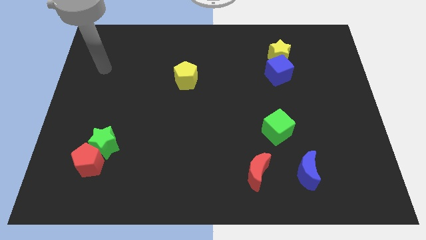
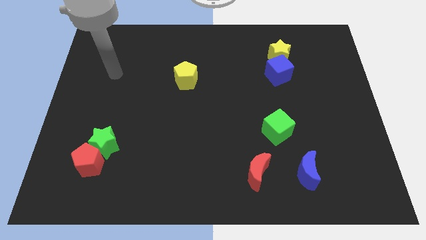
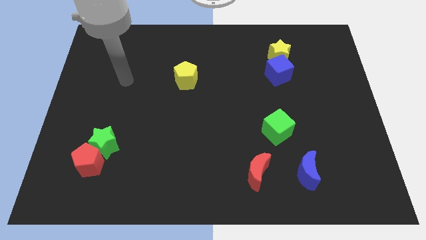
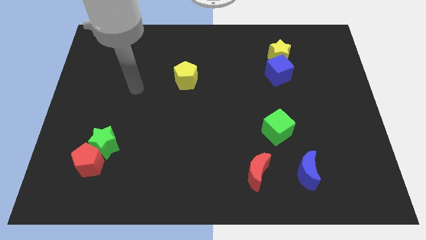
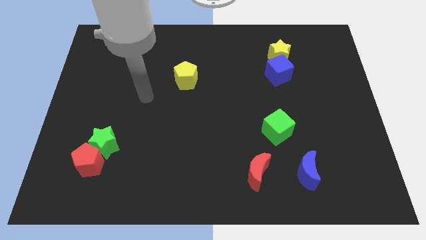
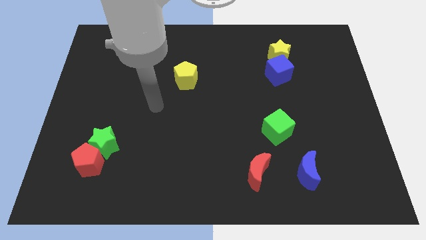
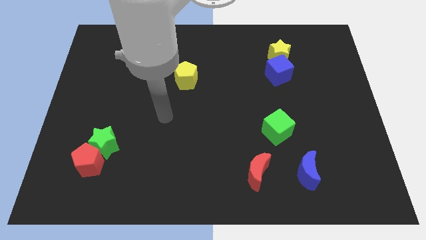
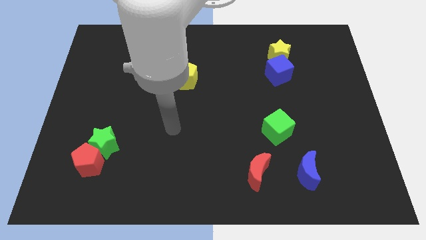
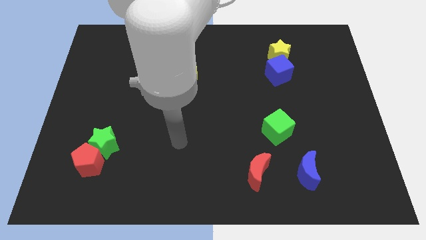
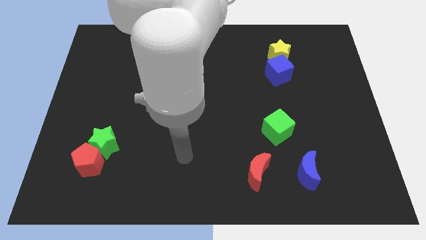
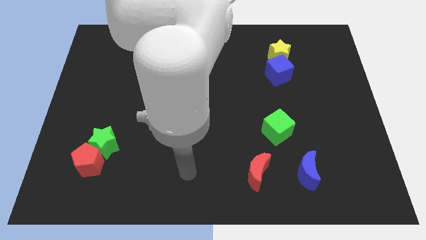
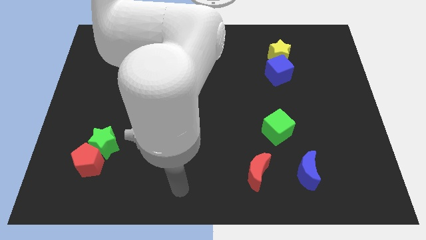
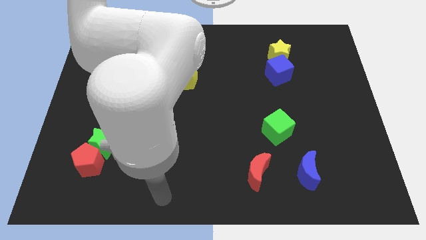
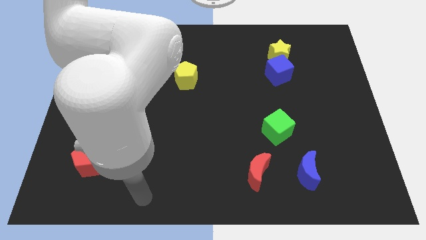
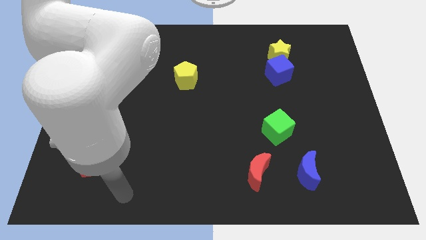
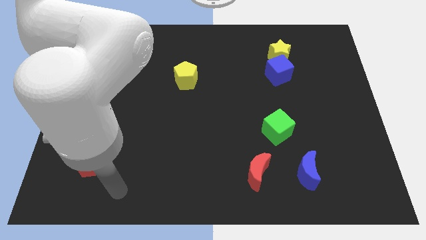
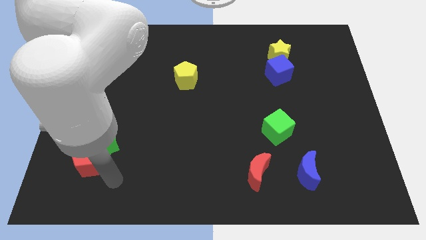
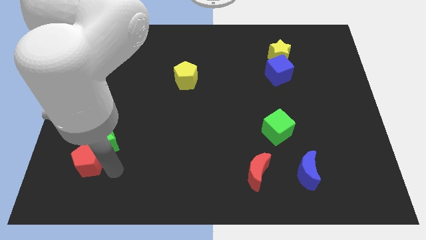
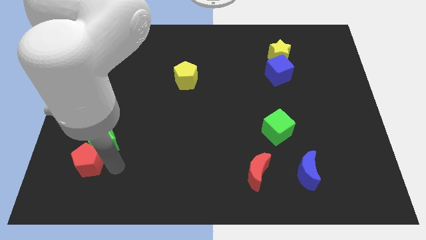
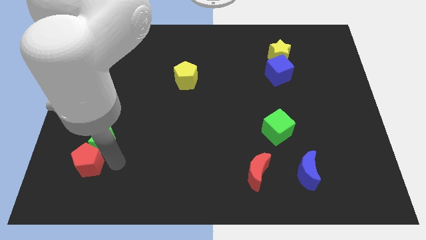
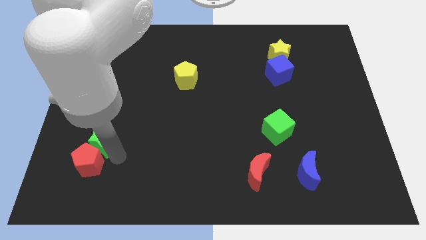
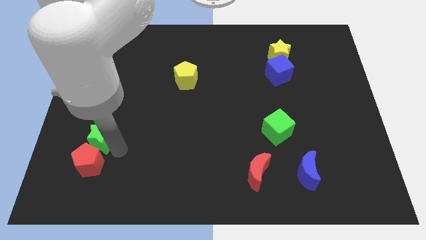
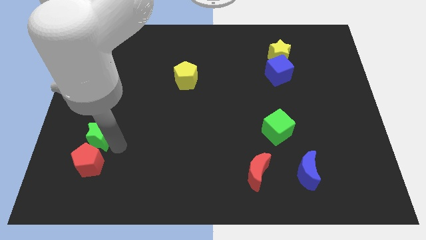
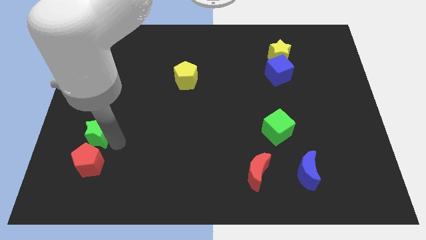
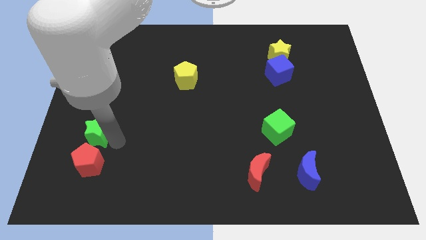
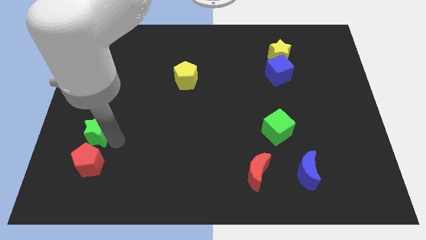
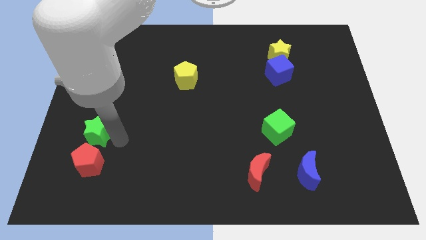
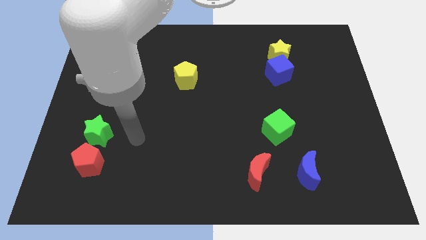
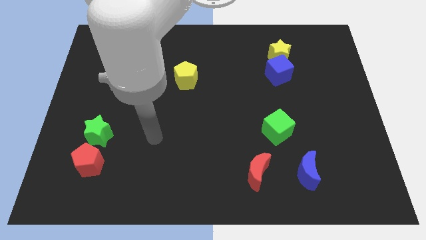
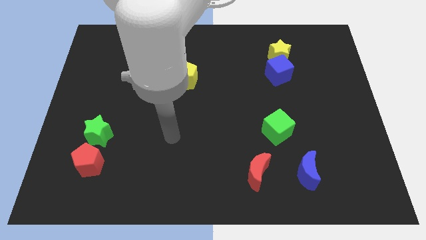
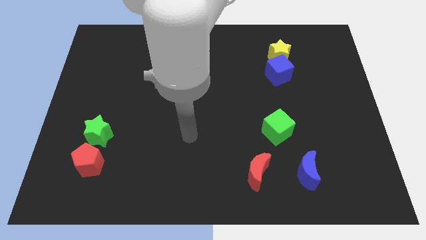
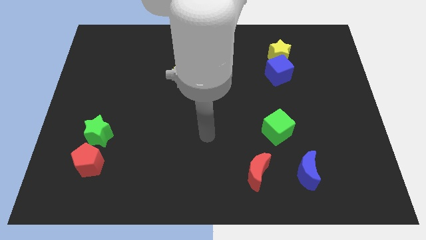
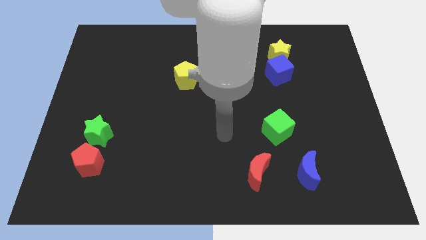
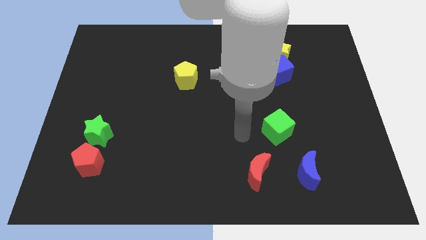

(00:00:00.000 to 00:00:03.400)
place the green star above the red pentagon

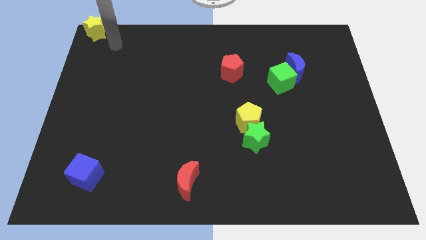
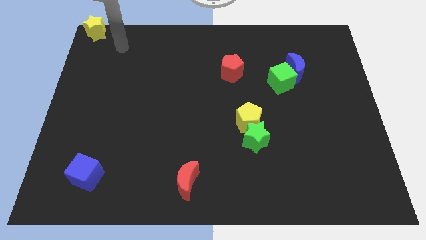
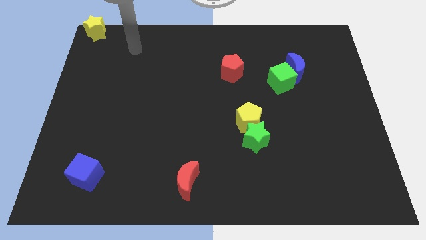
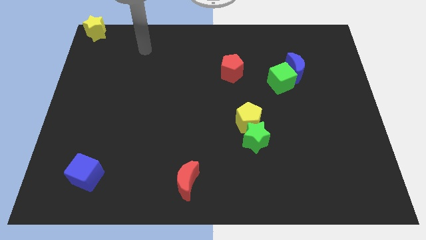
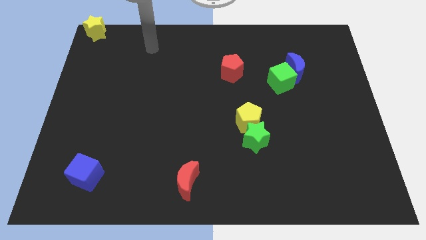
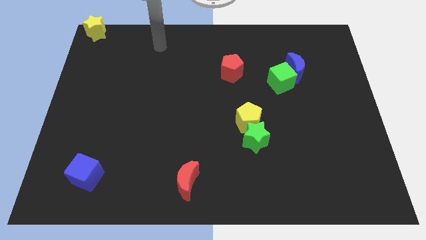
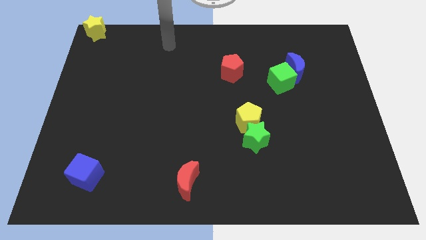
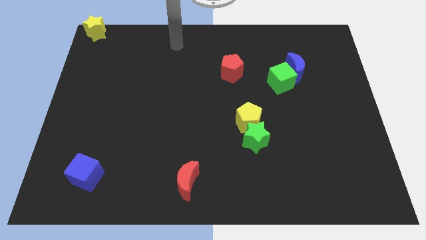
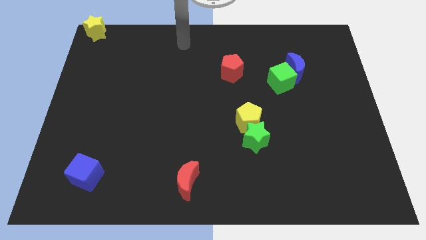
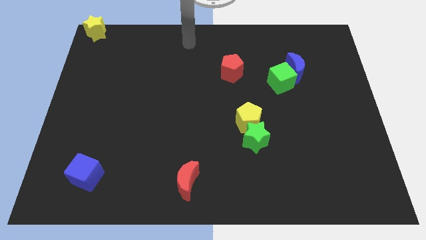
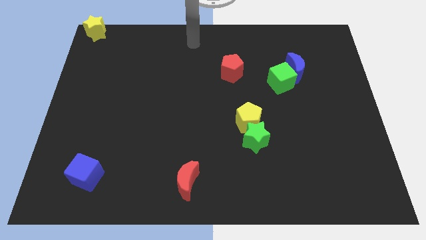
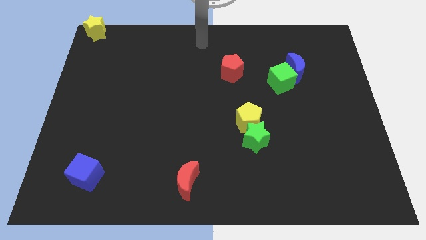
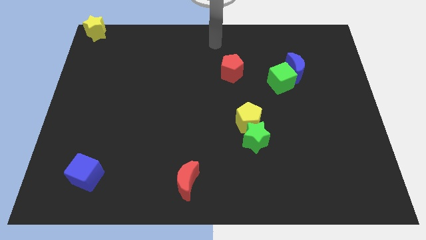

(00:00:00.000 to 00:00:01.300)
move the arm towards the top centre of the board

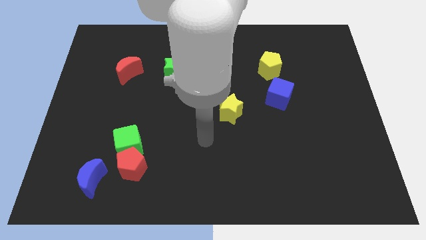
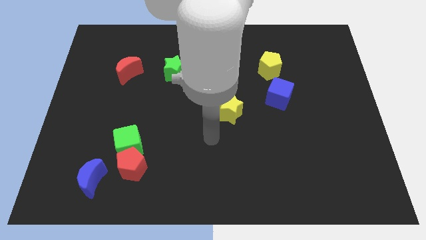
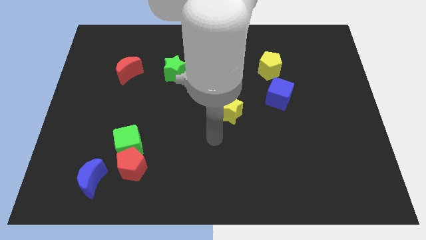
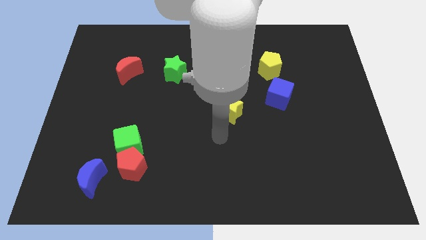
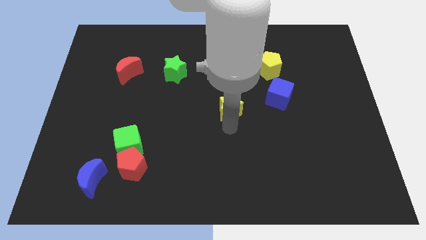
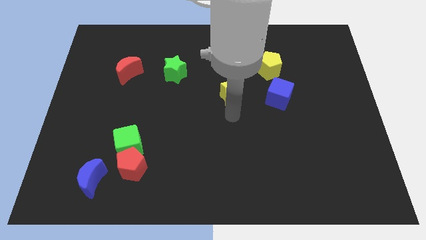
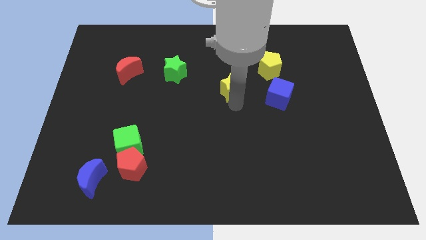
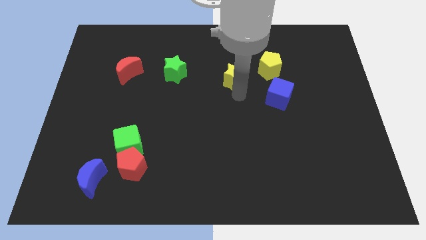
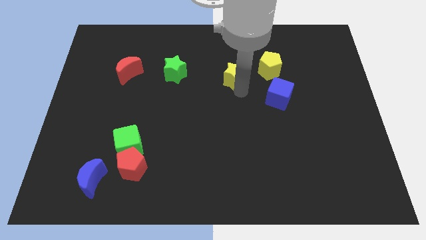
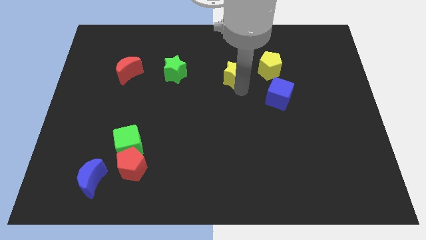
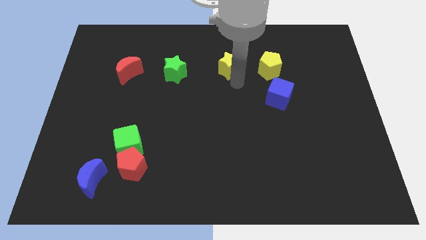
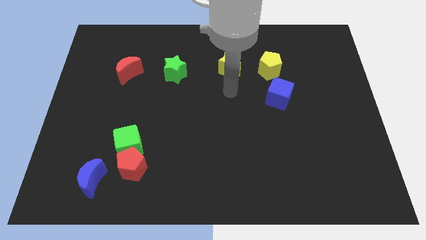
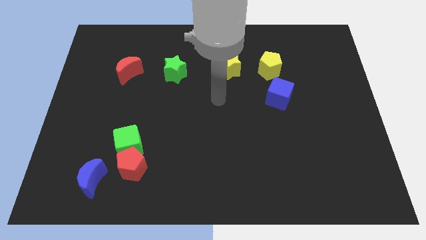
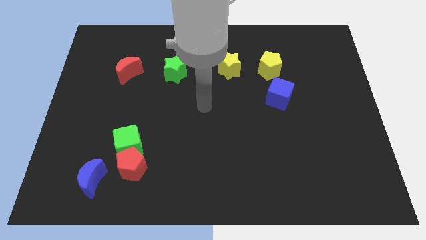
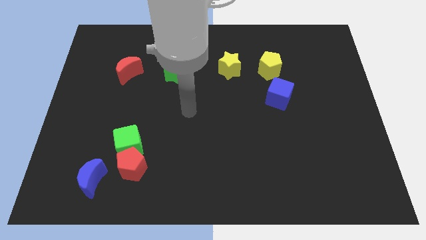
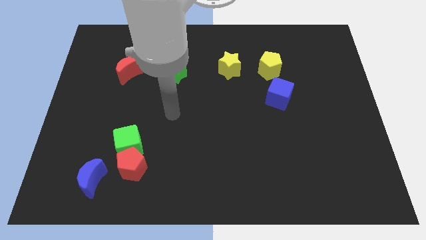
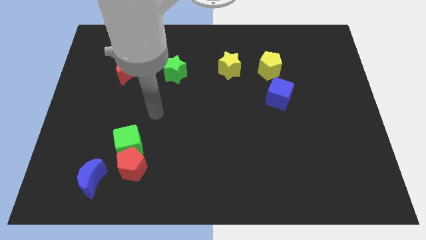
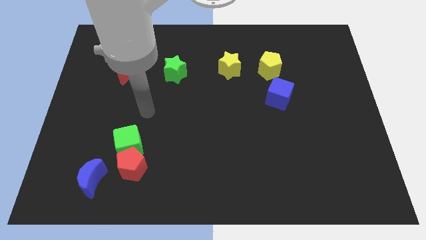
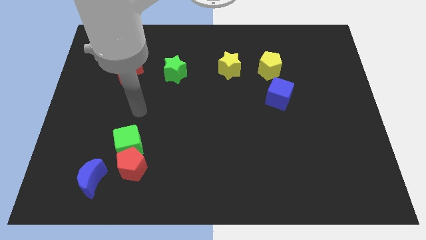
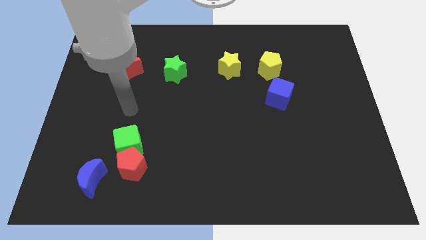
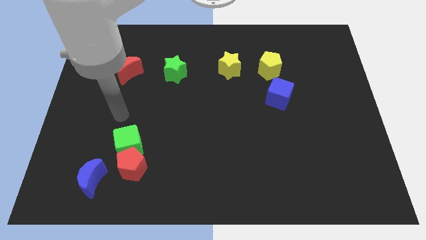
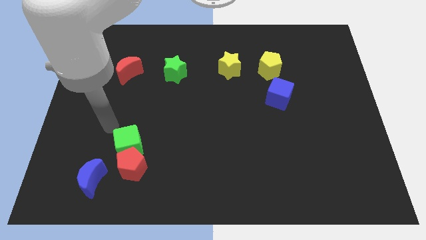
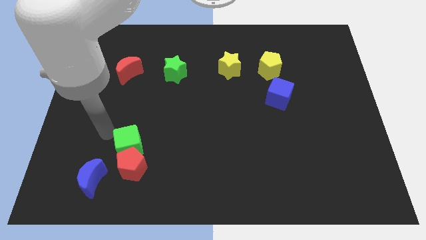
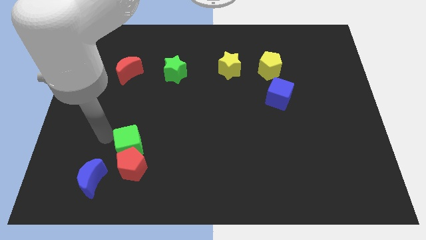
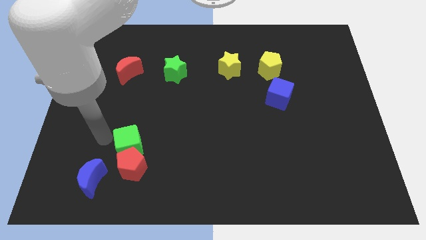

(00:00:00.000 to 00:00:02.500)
push yellow star upwards

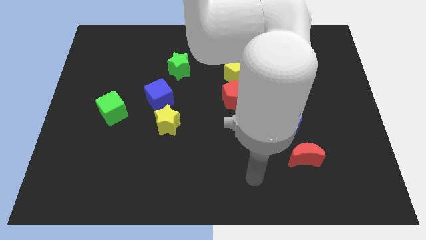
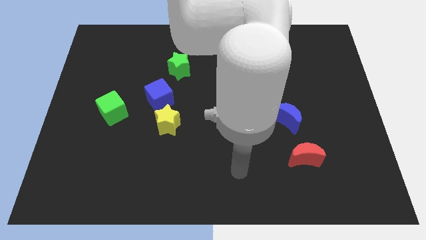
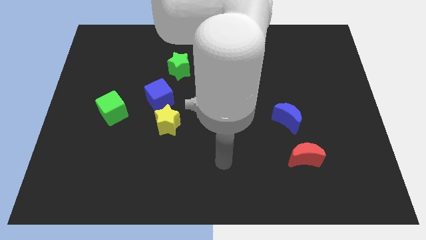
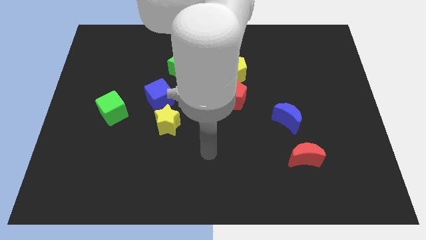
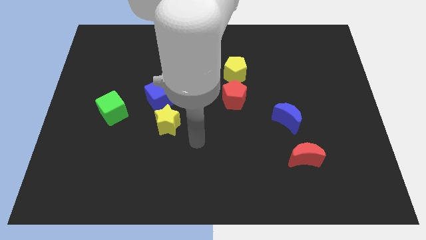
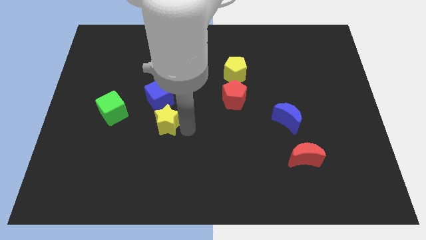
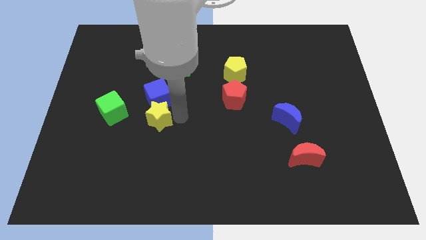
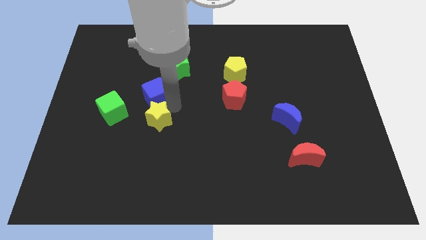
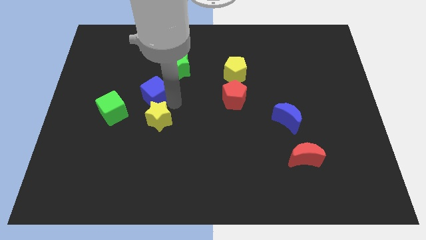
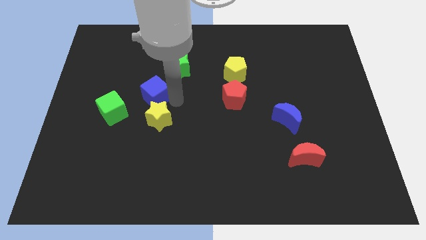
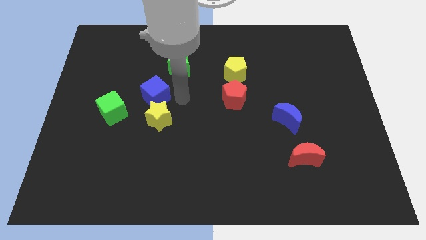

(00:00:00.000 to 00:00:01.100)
tap the yellow star and blue cube

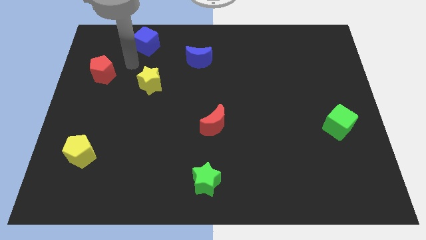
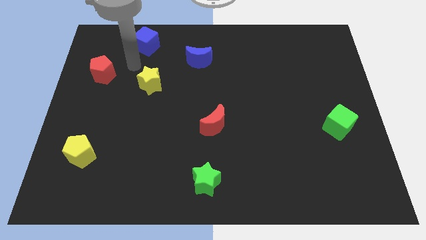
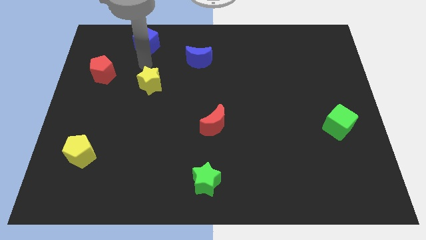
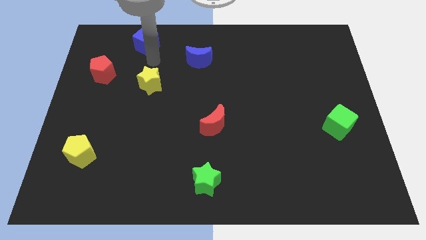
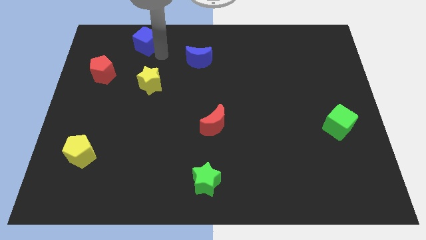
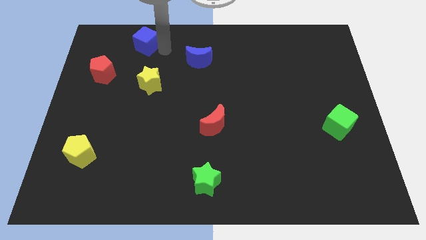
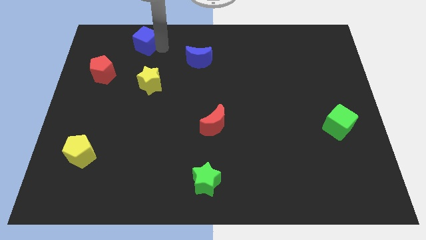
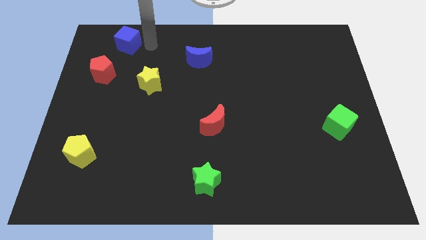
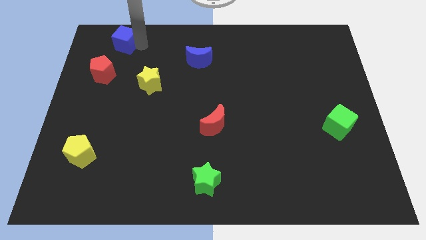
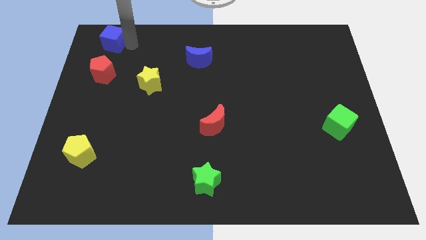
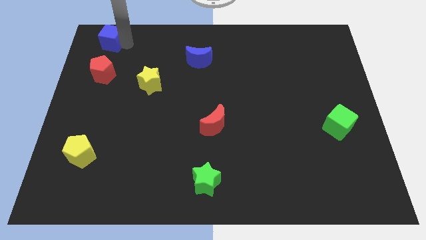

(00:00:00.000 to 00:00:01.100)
place the blue cube on the top of red pentagon
